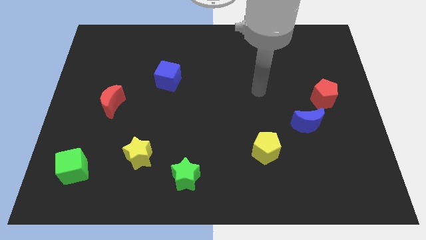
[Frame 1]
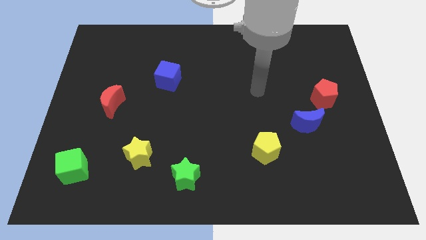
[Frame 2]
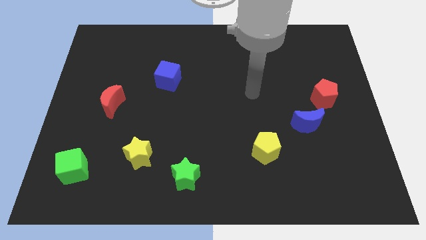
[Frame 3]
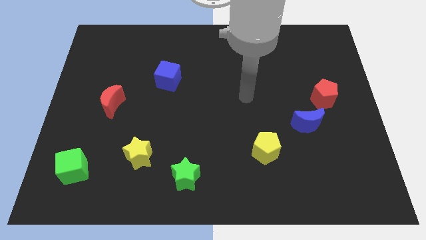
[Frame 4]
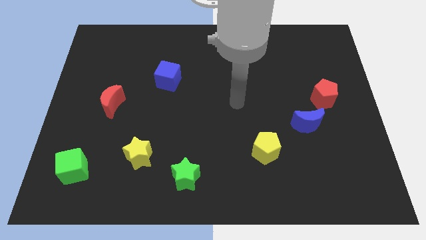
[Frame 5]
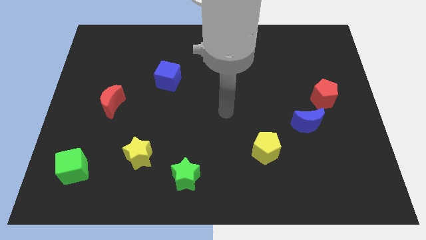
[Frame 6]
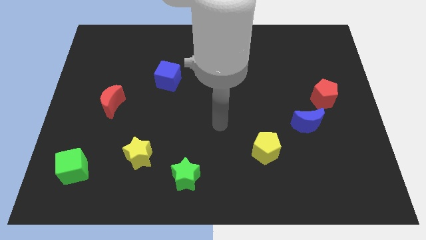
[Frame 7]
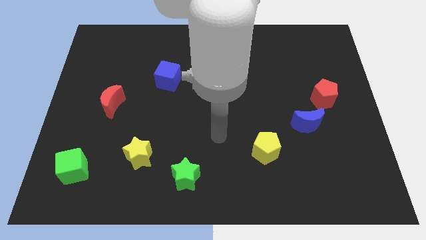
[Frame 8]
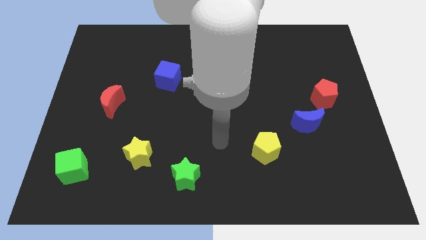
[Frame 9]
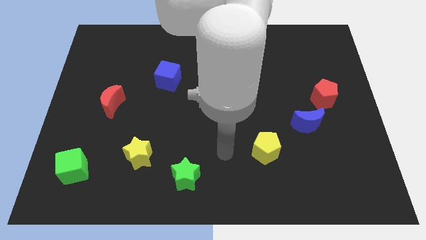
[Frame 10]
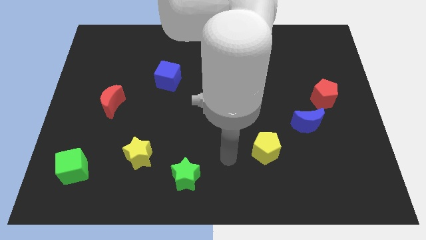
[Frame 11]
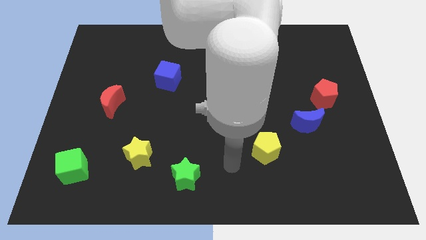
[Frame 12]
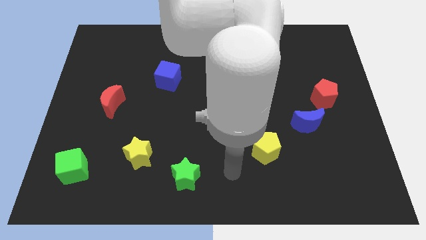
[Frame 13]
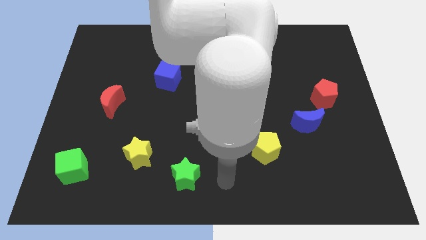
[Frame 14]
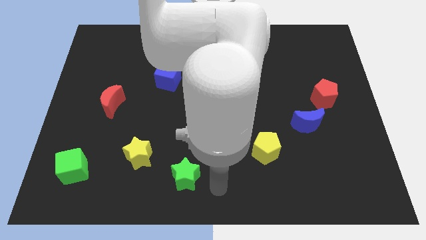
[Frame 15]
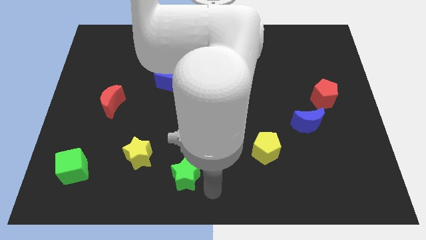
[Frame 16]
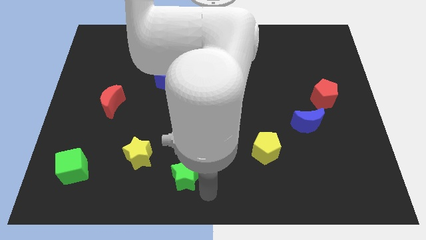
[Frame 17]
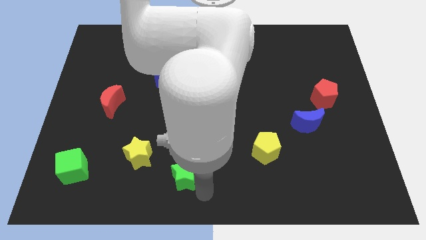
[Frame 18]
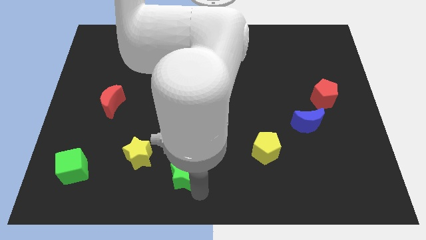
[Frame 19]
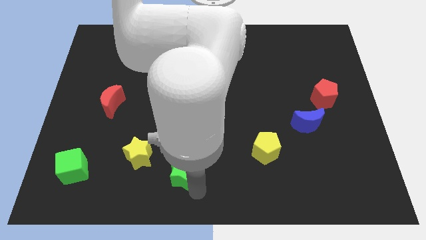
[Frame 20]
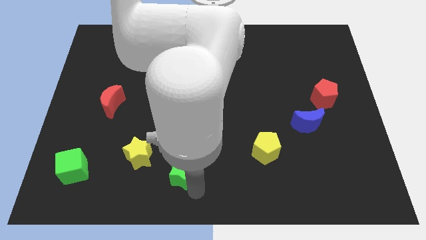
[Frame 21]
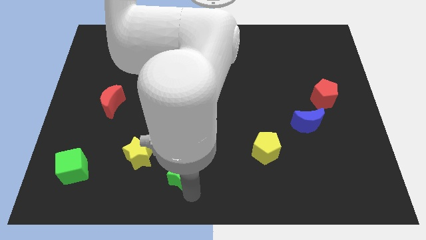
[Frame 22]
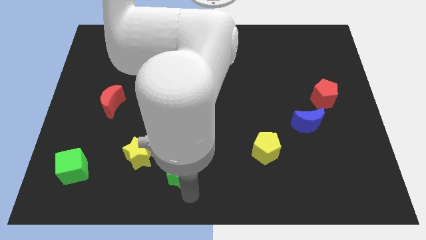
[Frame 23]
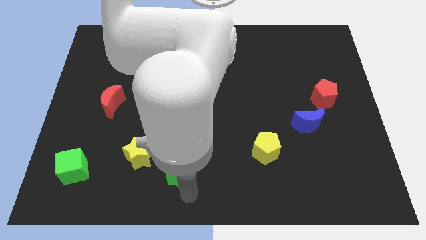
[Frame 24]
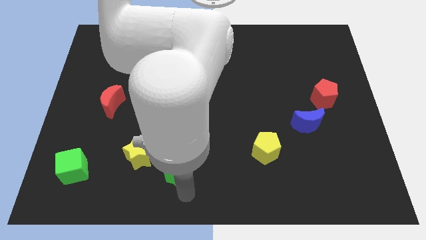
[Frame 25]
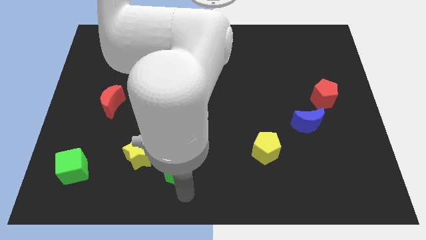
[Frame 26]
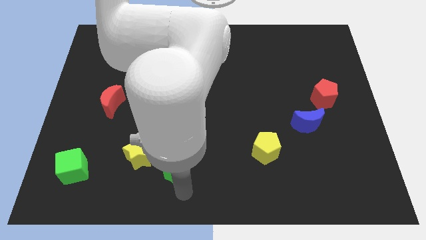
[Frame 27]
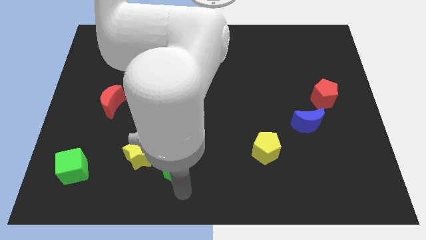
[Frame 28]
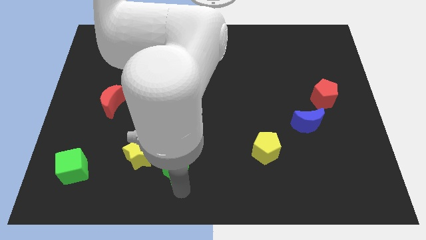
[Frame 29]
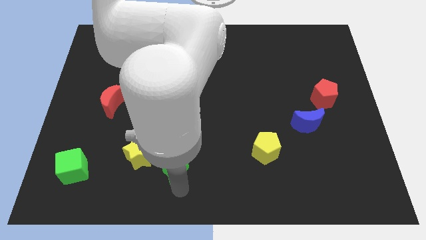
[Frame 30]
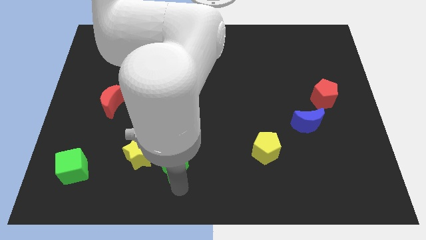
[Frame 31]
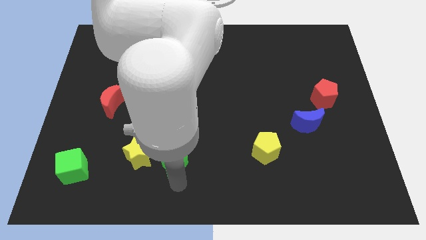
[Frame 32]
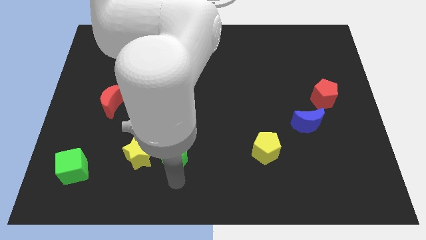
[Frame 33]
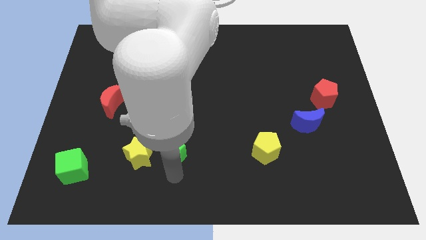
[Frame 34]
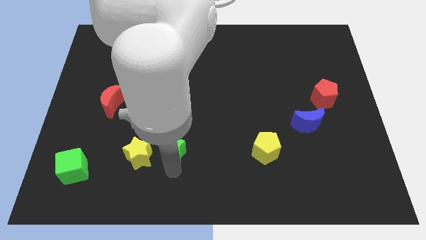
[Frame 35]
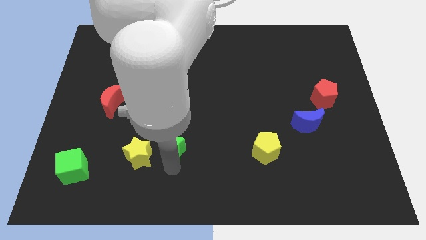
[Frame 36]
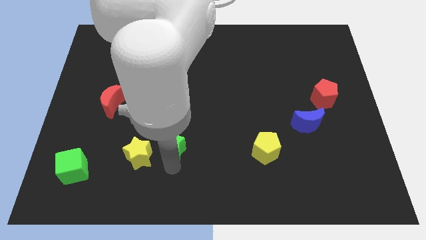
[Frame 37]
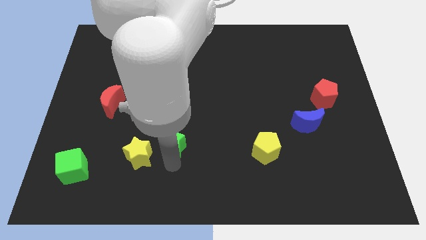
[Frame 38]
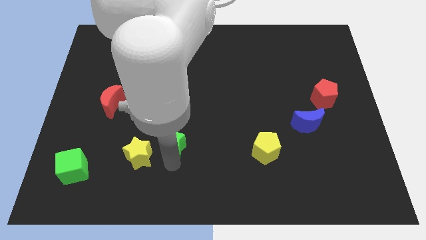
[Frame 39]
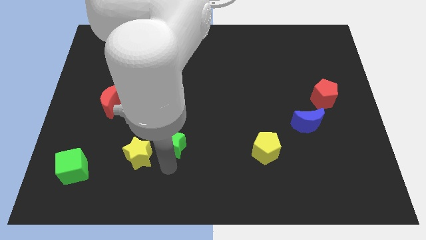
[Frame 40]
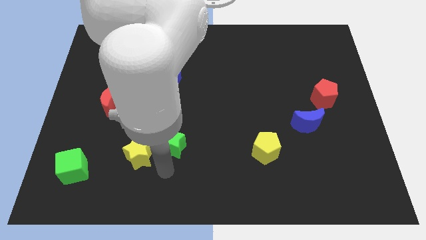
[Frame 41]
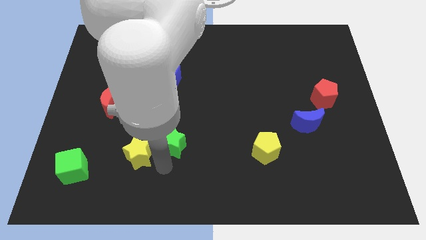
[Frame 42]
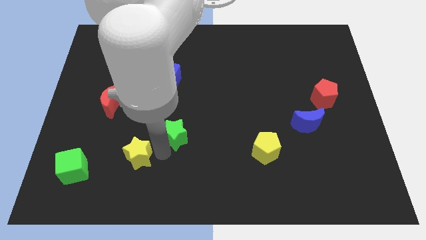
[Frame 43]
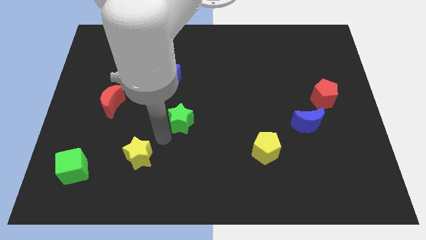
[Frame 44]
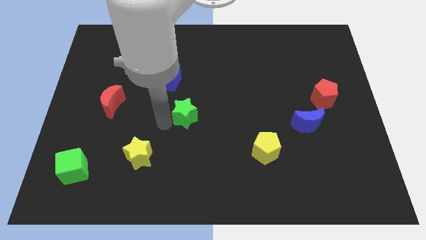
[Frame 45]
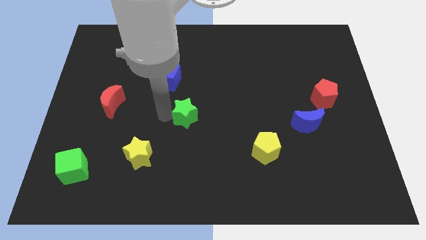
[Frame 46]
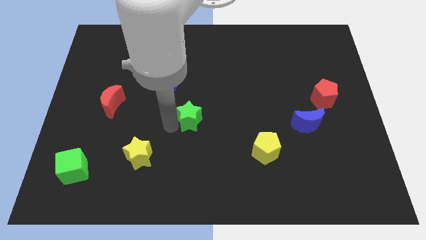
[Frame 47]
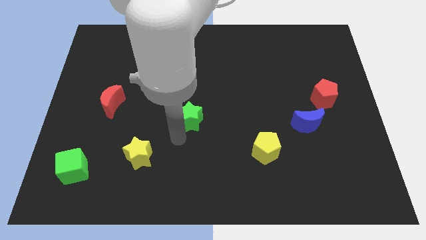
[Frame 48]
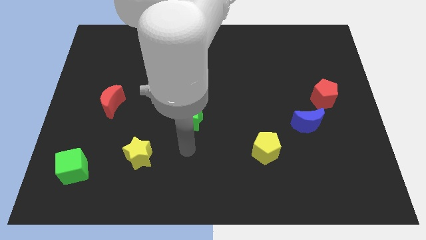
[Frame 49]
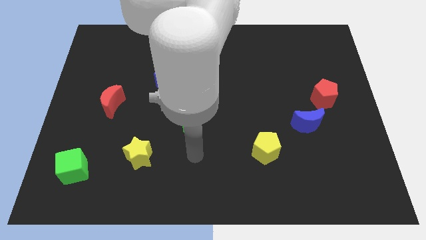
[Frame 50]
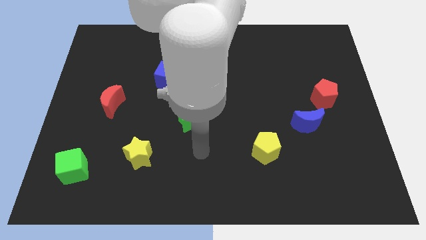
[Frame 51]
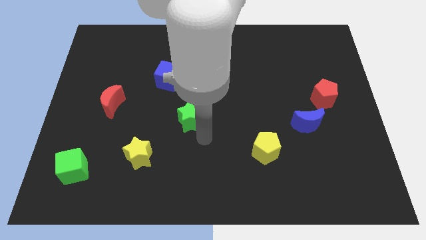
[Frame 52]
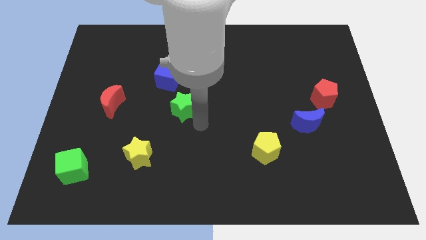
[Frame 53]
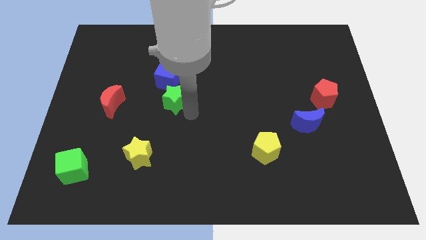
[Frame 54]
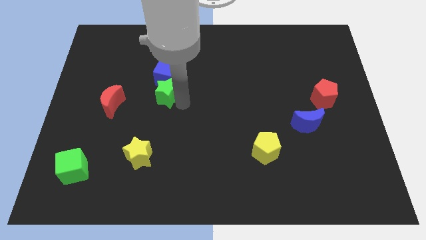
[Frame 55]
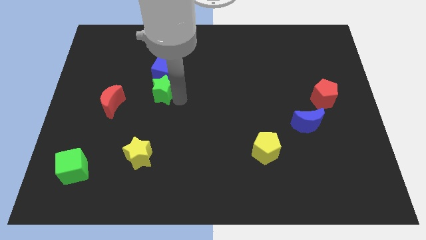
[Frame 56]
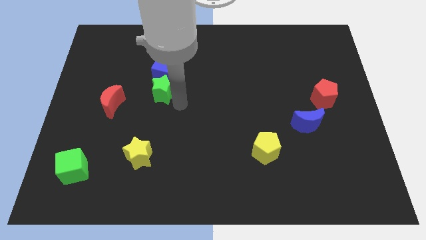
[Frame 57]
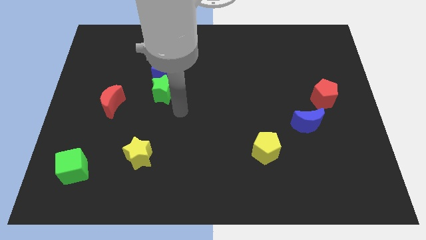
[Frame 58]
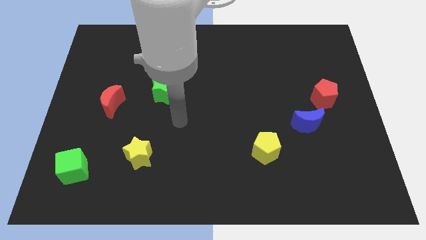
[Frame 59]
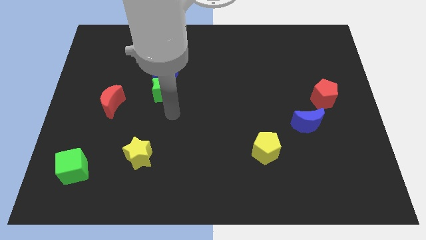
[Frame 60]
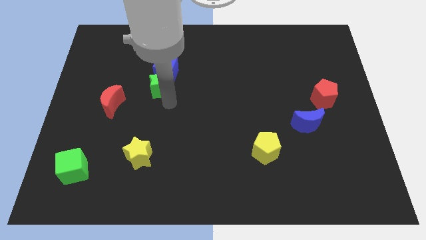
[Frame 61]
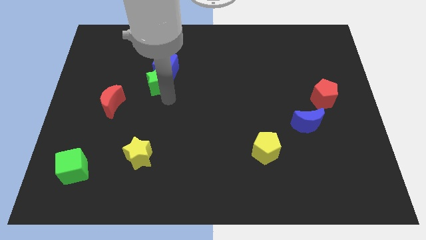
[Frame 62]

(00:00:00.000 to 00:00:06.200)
move the green star into the blue cube

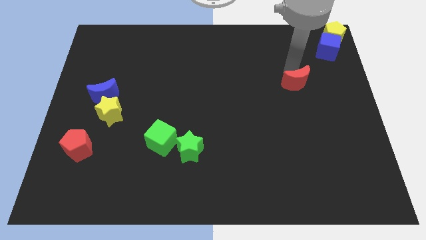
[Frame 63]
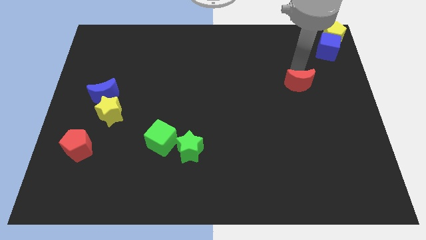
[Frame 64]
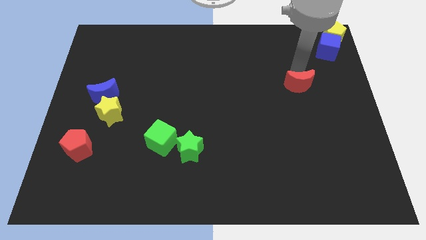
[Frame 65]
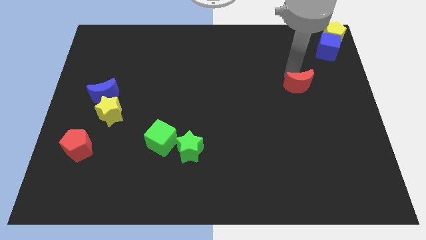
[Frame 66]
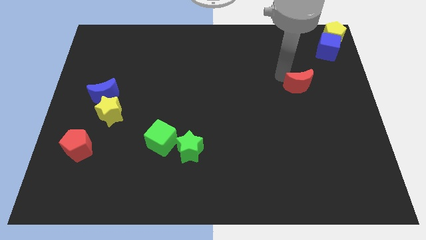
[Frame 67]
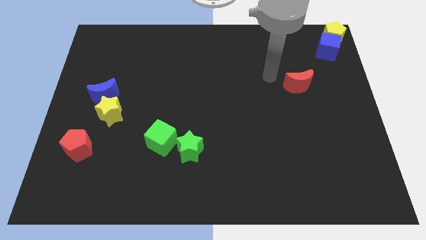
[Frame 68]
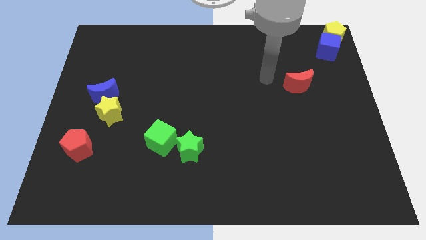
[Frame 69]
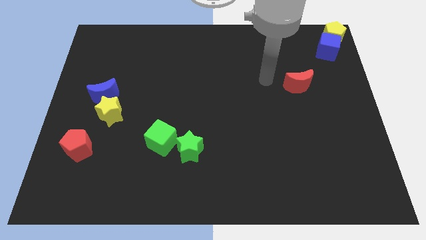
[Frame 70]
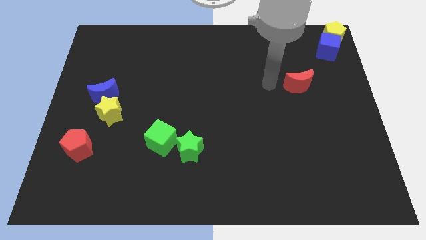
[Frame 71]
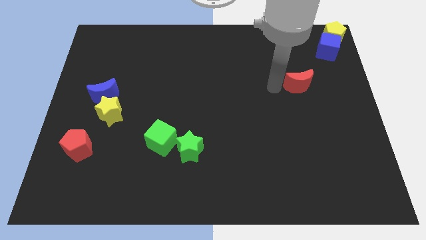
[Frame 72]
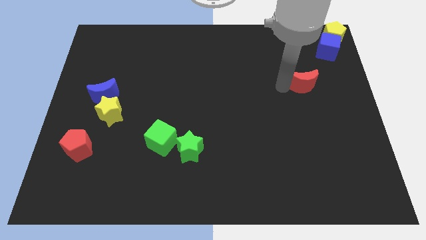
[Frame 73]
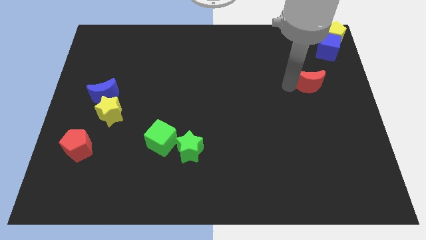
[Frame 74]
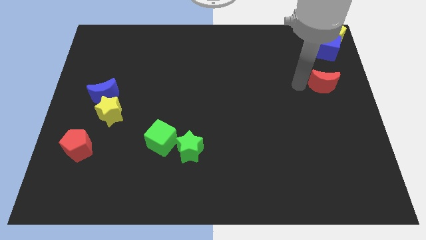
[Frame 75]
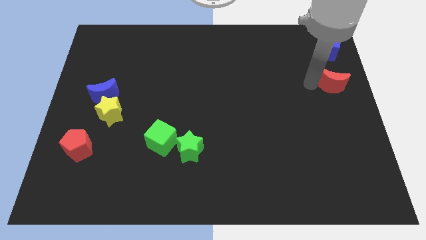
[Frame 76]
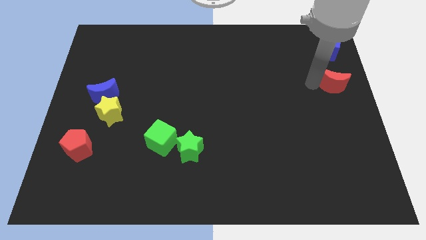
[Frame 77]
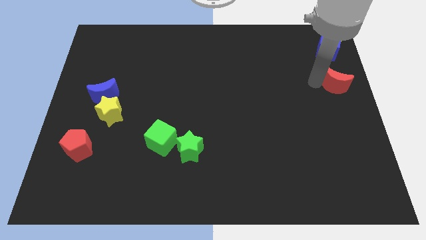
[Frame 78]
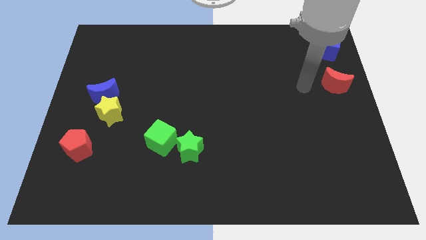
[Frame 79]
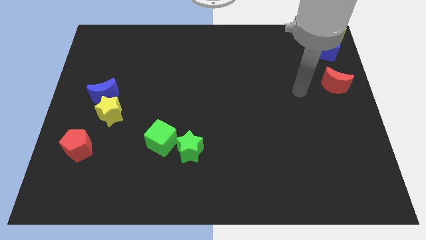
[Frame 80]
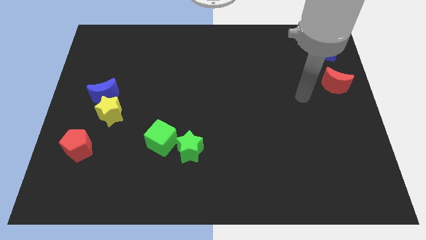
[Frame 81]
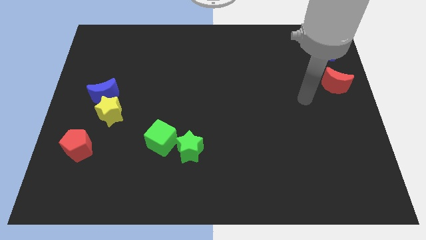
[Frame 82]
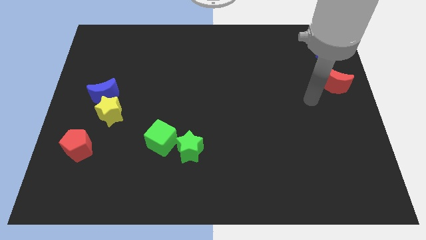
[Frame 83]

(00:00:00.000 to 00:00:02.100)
place red moon below blue cube

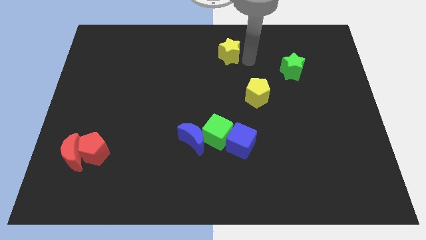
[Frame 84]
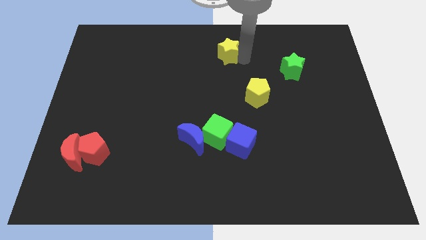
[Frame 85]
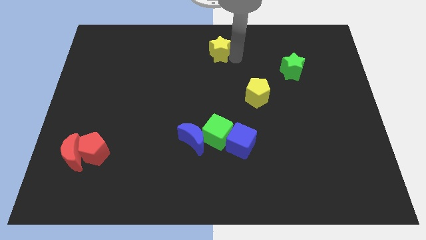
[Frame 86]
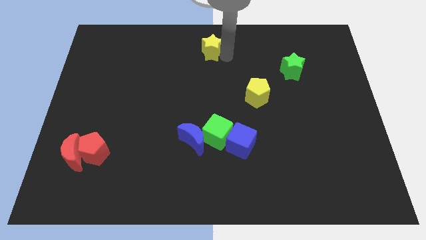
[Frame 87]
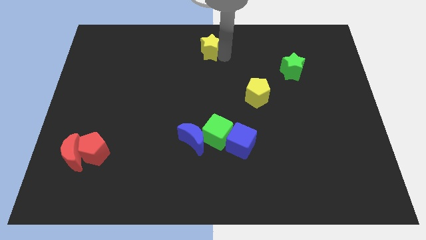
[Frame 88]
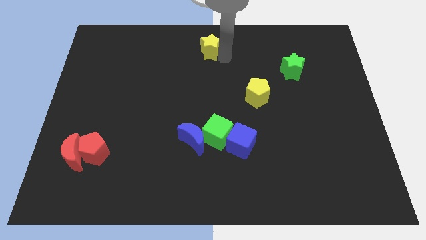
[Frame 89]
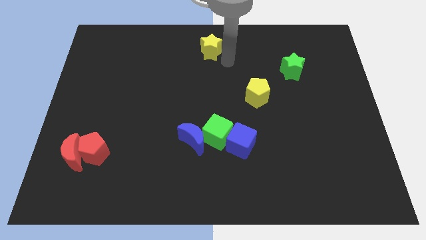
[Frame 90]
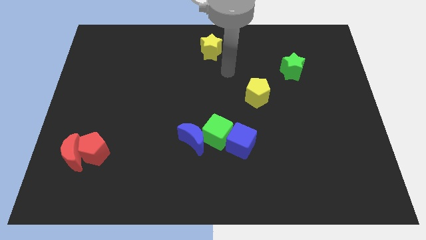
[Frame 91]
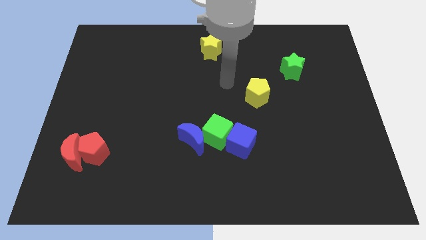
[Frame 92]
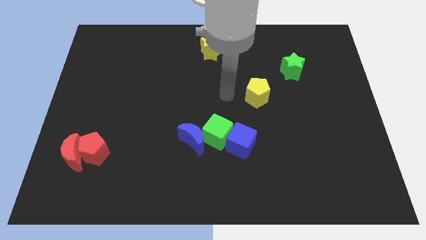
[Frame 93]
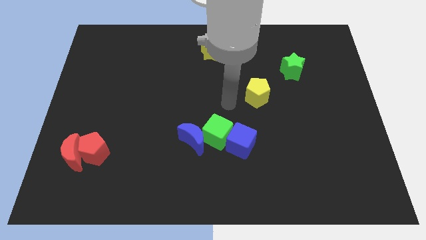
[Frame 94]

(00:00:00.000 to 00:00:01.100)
slightly push the yellow star to the top center of the board
